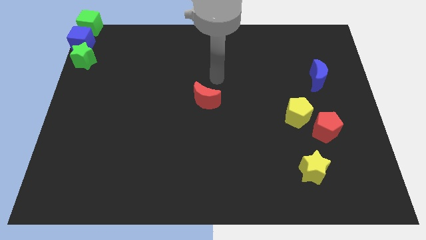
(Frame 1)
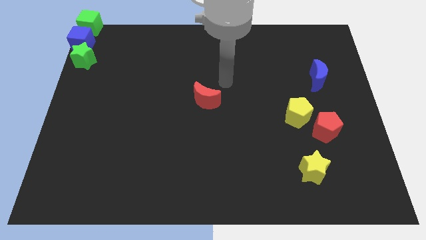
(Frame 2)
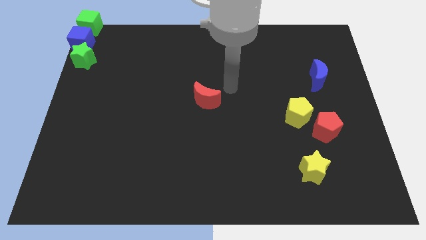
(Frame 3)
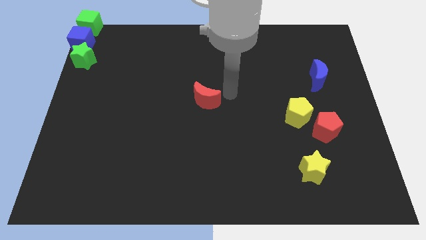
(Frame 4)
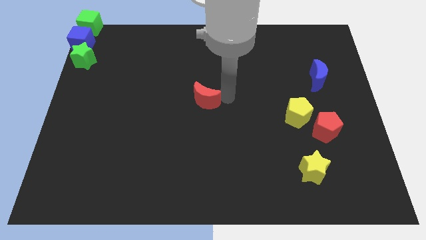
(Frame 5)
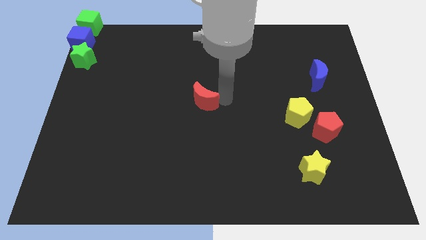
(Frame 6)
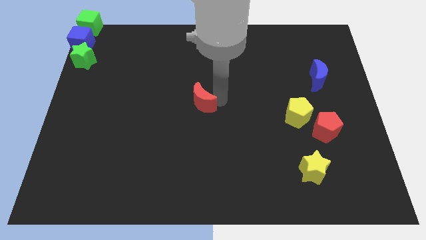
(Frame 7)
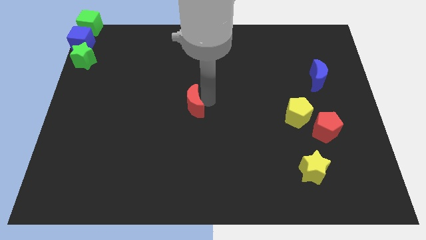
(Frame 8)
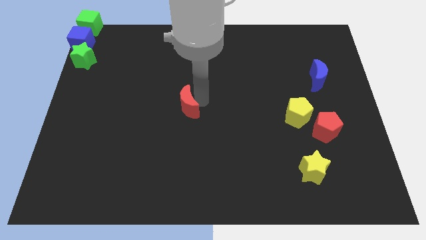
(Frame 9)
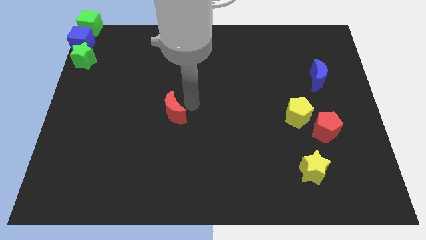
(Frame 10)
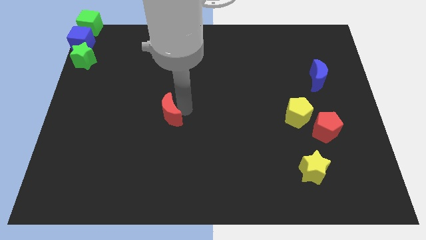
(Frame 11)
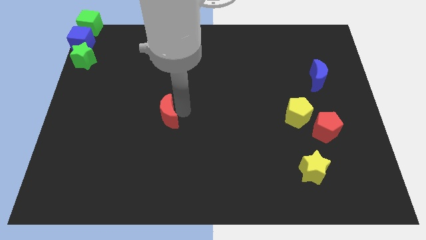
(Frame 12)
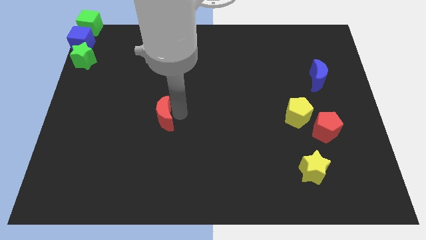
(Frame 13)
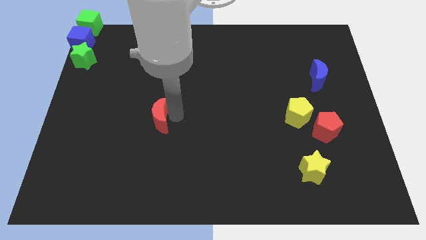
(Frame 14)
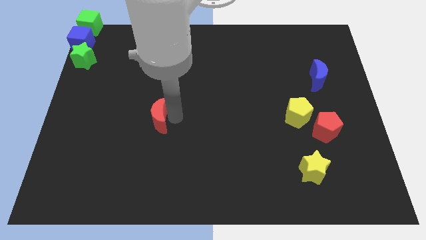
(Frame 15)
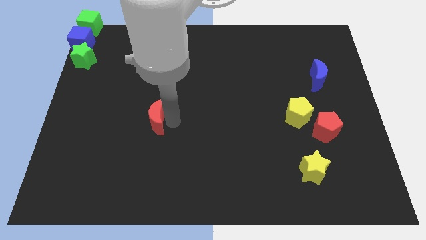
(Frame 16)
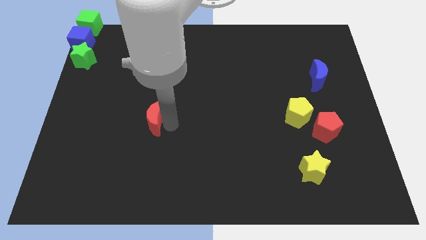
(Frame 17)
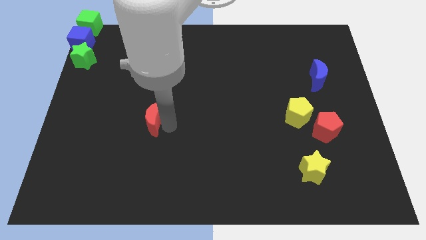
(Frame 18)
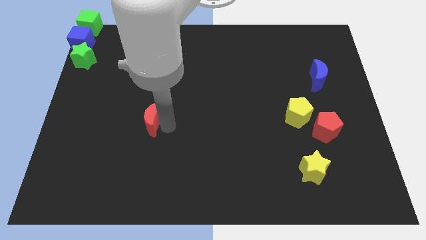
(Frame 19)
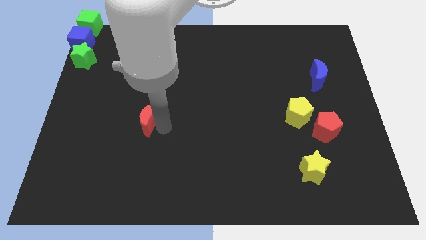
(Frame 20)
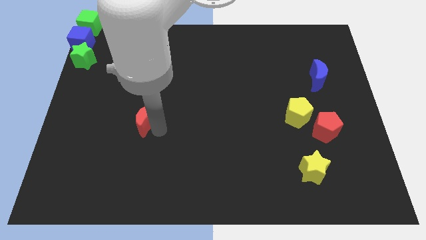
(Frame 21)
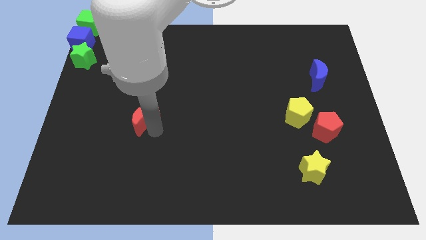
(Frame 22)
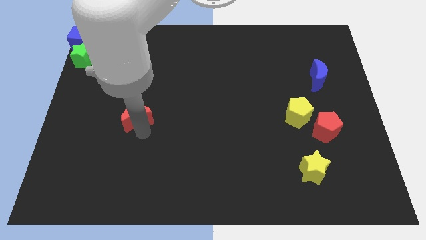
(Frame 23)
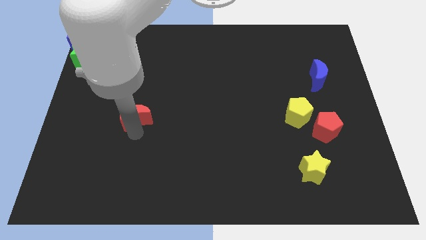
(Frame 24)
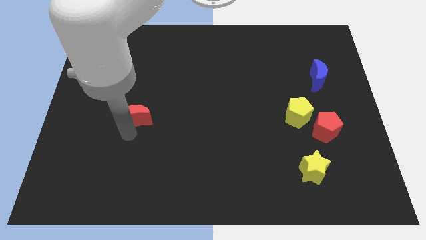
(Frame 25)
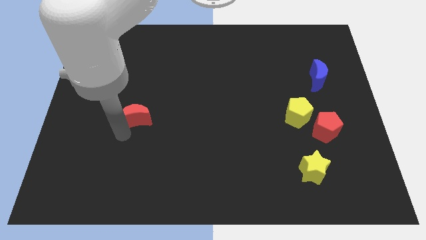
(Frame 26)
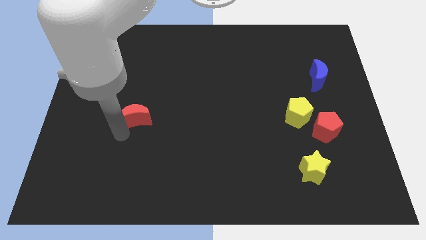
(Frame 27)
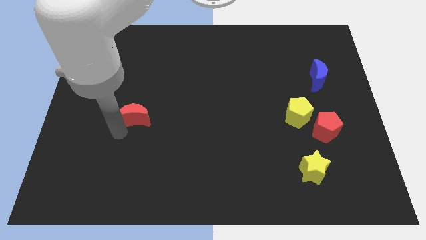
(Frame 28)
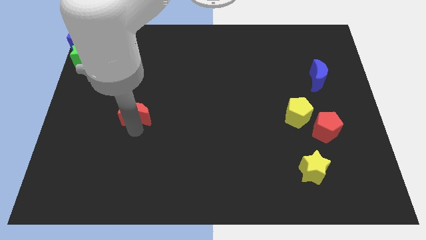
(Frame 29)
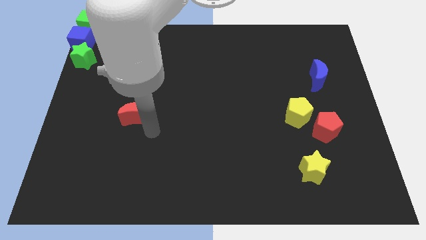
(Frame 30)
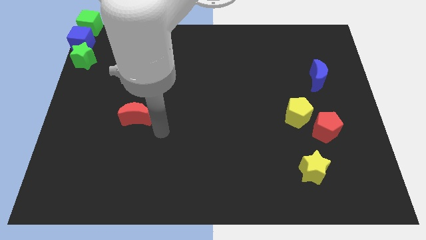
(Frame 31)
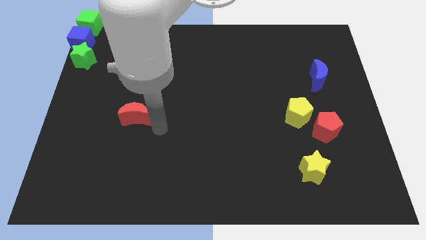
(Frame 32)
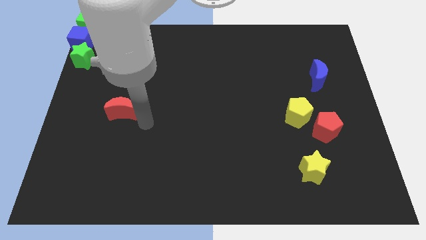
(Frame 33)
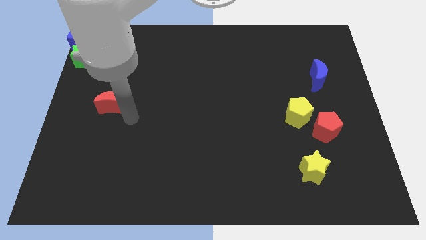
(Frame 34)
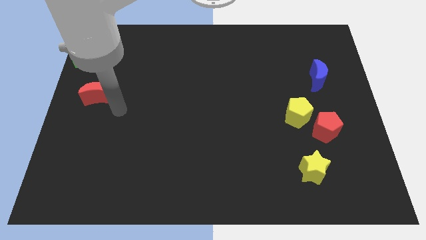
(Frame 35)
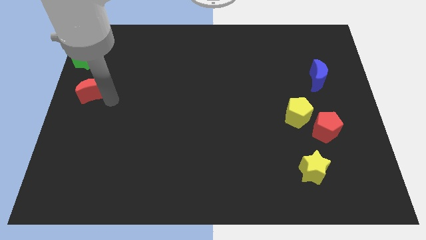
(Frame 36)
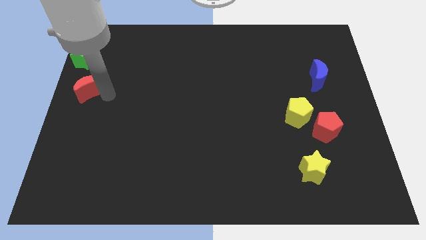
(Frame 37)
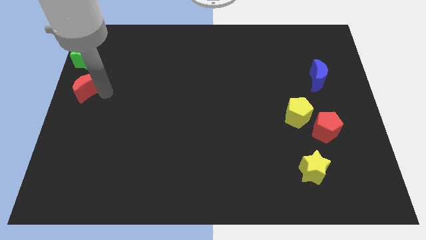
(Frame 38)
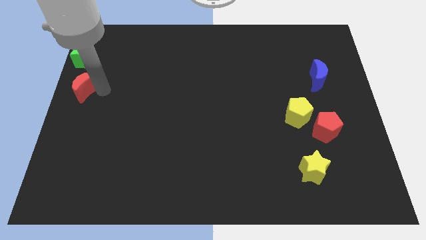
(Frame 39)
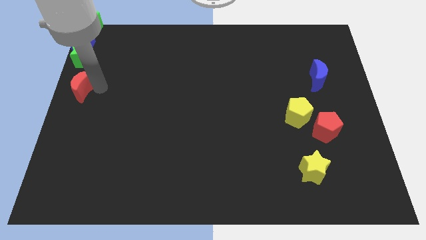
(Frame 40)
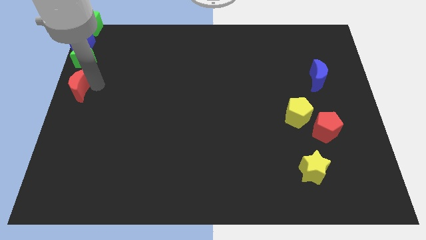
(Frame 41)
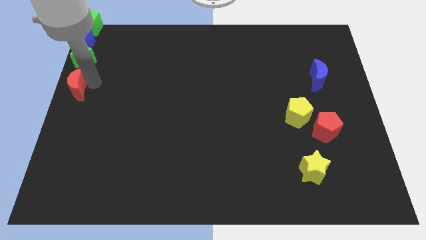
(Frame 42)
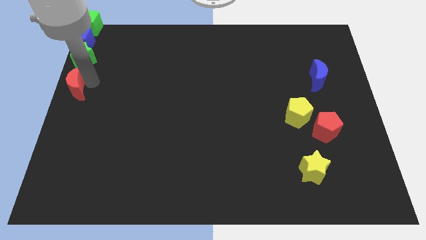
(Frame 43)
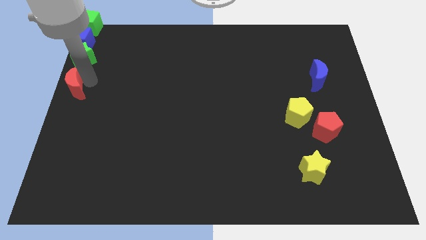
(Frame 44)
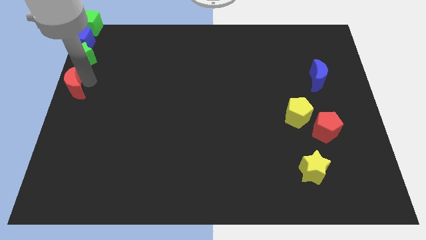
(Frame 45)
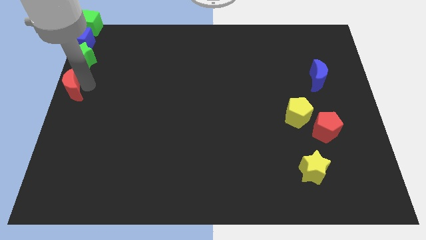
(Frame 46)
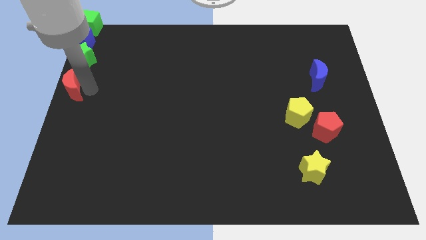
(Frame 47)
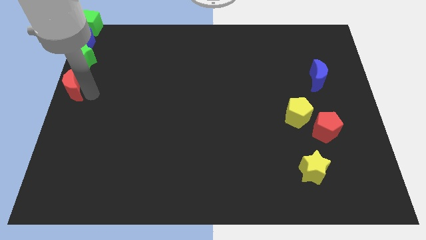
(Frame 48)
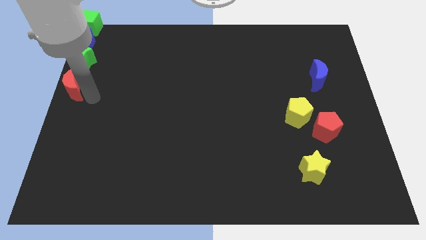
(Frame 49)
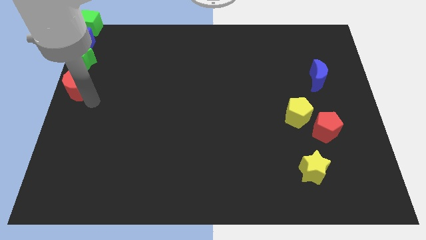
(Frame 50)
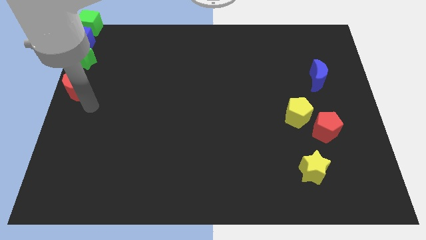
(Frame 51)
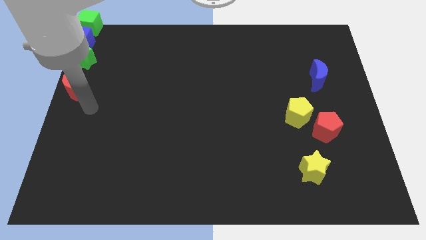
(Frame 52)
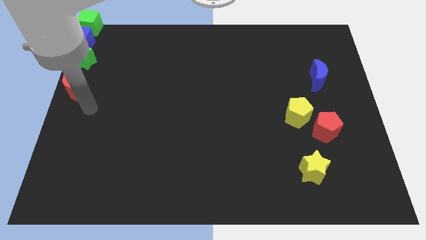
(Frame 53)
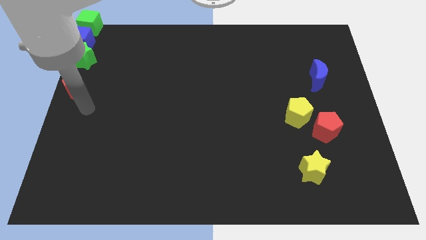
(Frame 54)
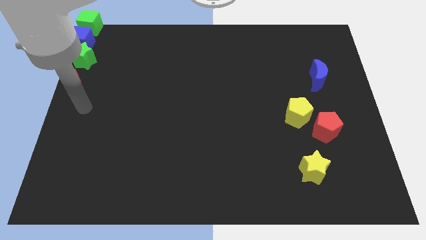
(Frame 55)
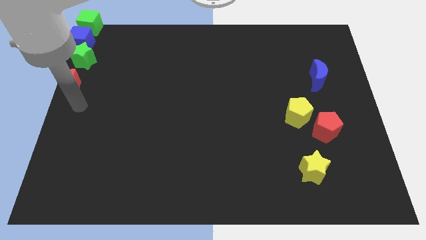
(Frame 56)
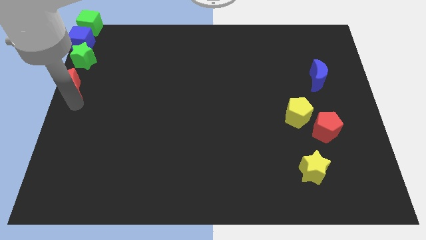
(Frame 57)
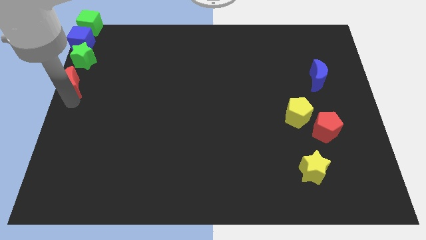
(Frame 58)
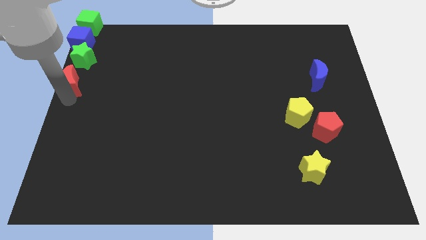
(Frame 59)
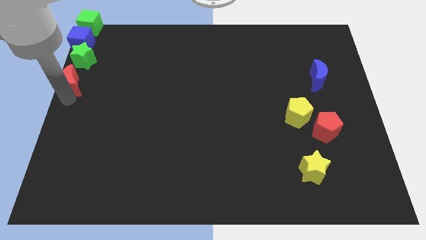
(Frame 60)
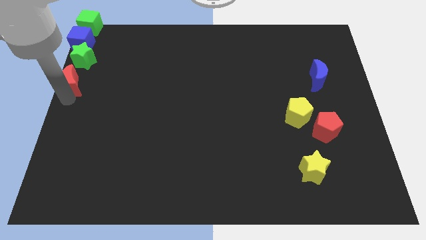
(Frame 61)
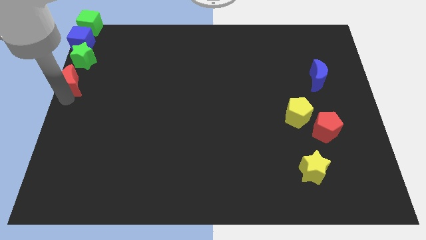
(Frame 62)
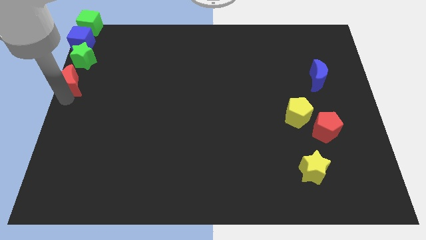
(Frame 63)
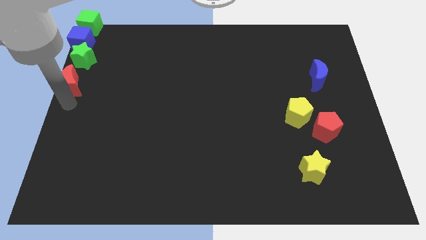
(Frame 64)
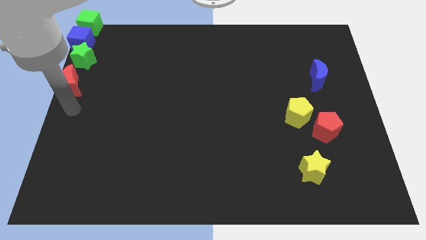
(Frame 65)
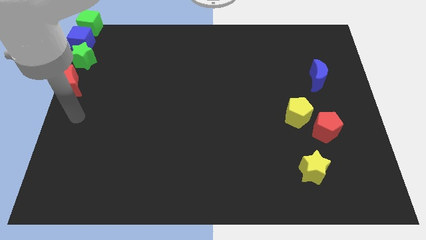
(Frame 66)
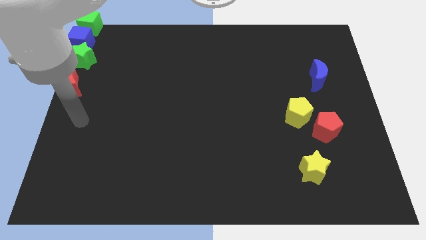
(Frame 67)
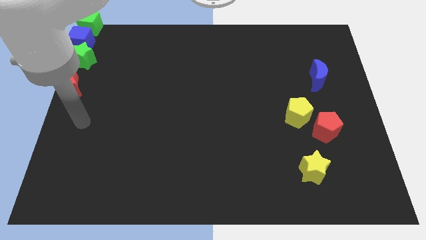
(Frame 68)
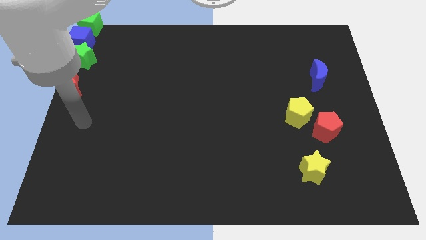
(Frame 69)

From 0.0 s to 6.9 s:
place the red crescent bottom of the green star

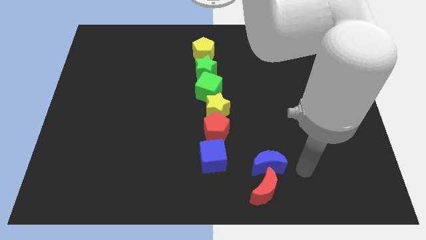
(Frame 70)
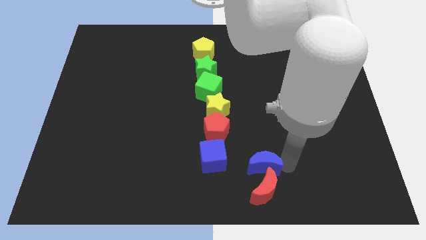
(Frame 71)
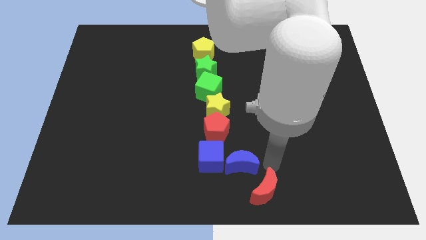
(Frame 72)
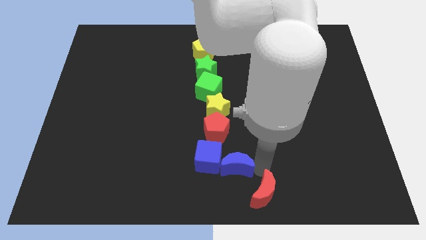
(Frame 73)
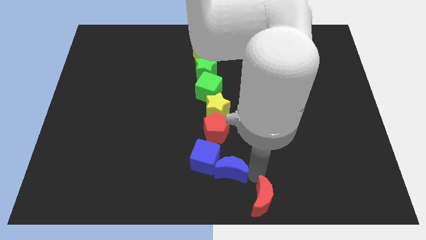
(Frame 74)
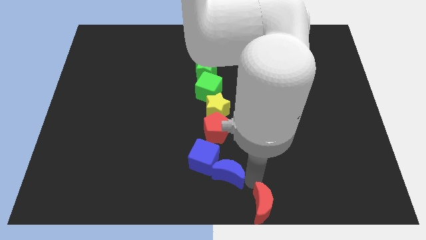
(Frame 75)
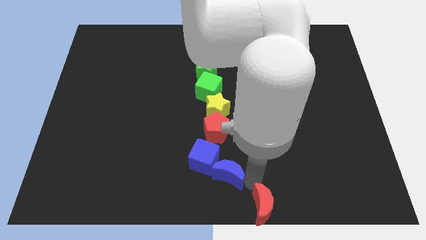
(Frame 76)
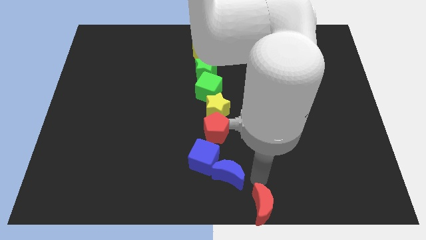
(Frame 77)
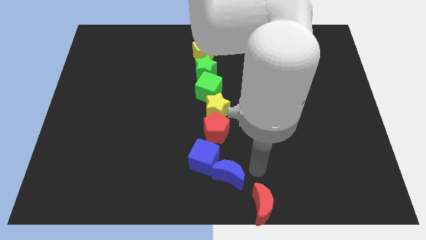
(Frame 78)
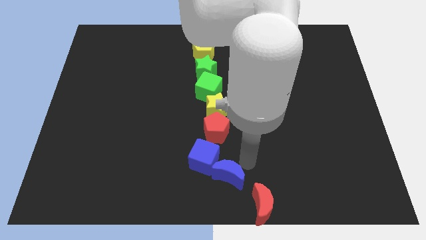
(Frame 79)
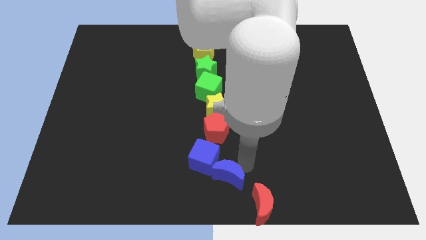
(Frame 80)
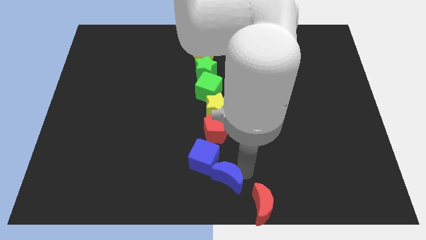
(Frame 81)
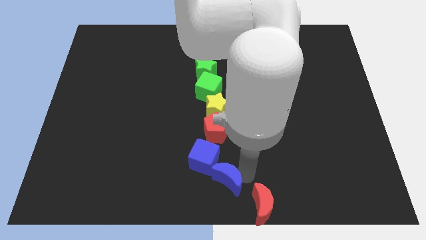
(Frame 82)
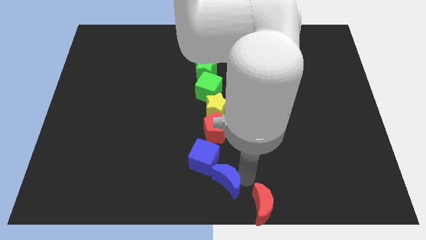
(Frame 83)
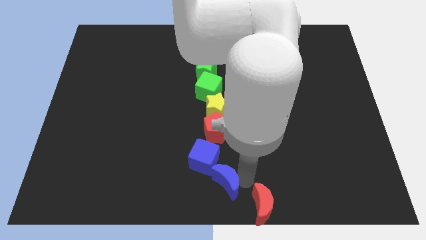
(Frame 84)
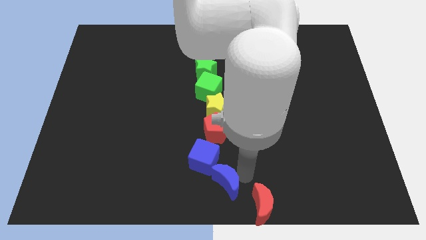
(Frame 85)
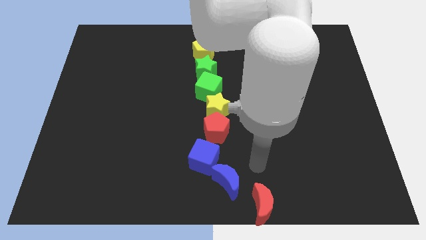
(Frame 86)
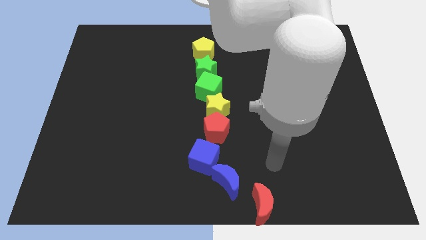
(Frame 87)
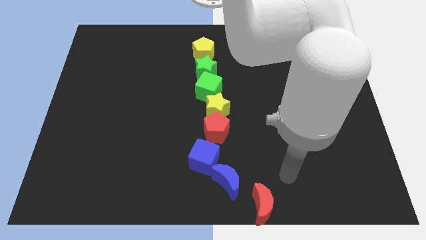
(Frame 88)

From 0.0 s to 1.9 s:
separate the blue moon between blue cube and red moon

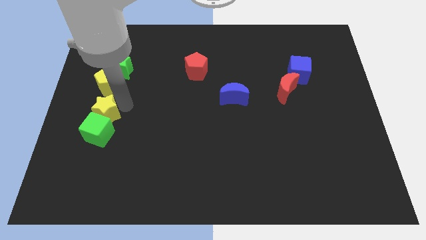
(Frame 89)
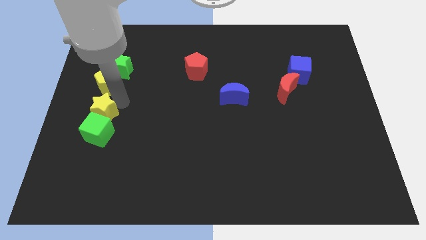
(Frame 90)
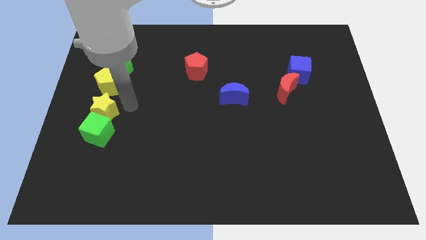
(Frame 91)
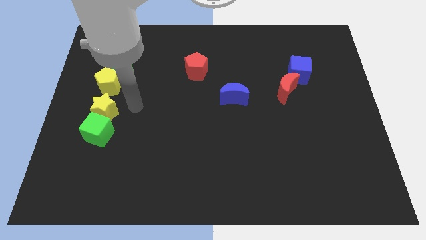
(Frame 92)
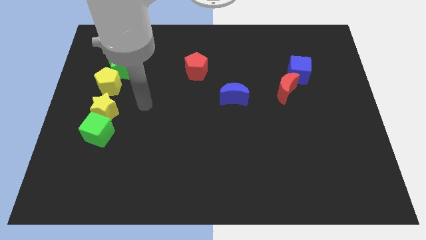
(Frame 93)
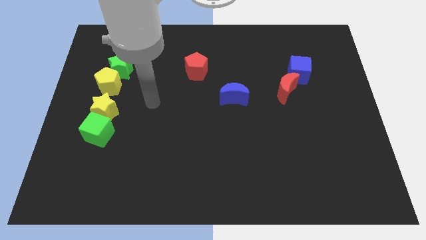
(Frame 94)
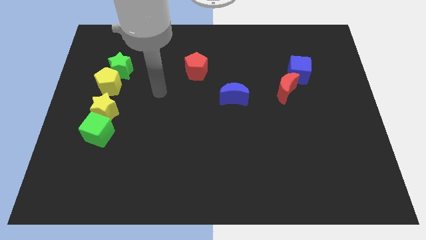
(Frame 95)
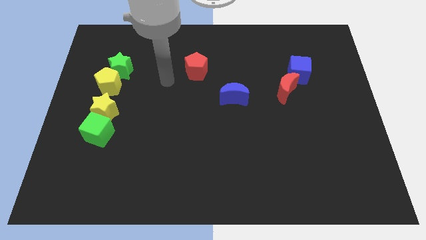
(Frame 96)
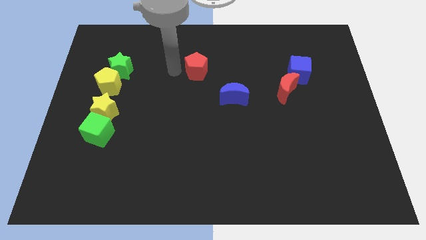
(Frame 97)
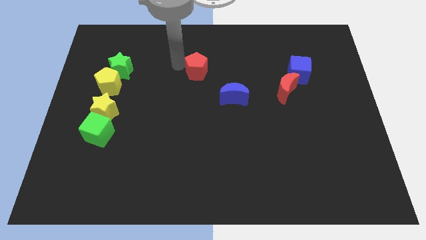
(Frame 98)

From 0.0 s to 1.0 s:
place your arm towards left side of red pentagon
